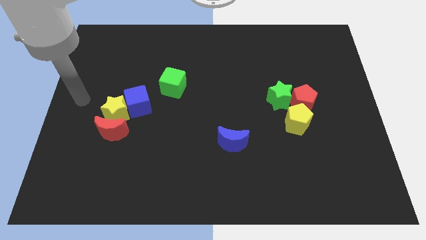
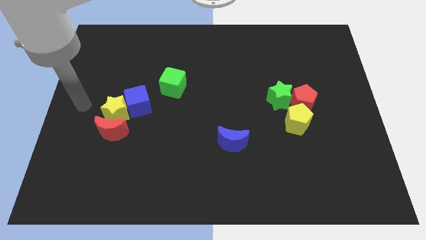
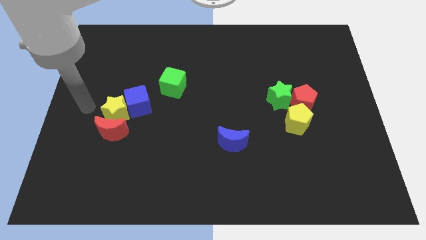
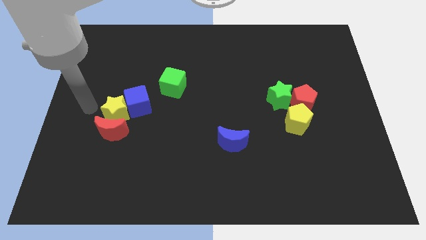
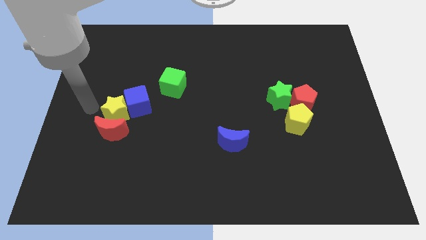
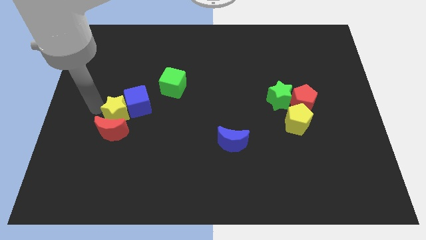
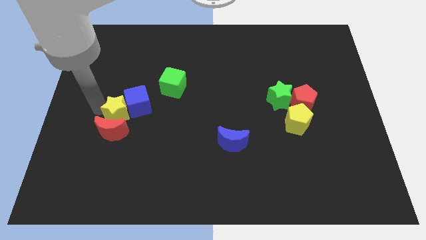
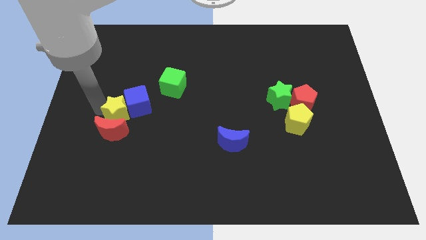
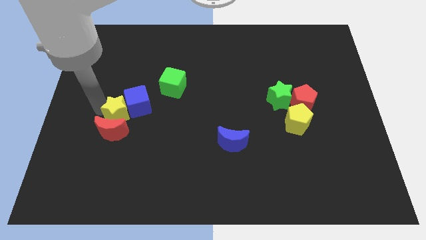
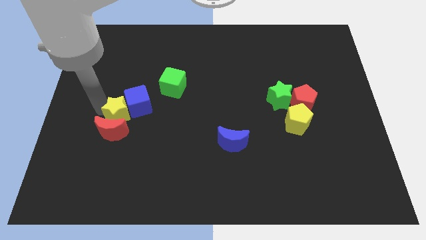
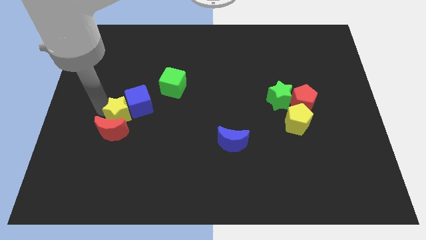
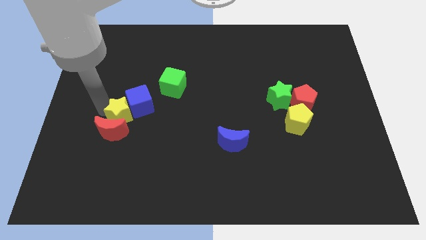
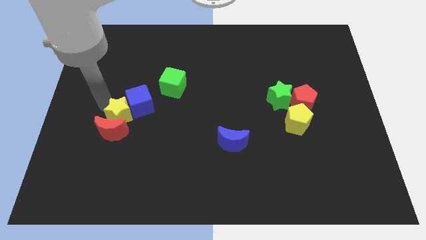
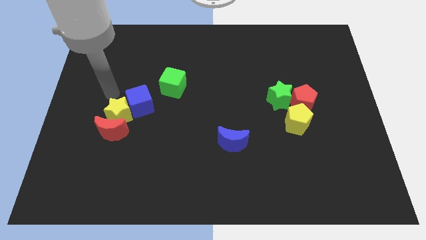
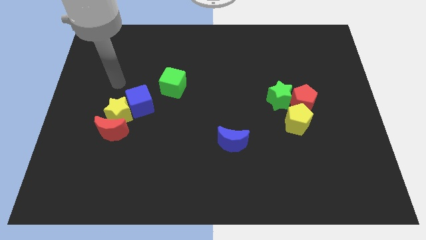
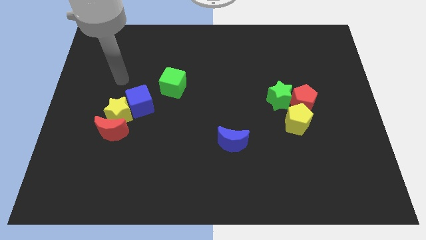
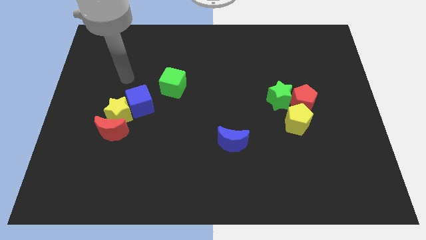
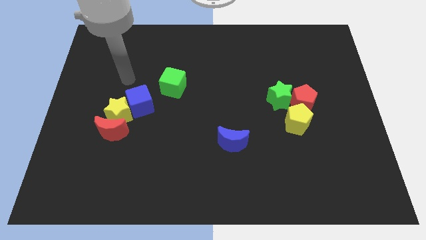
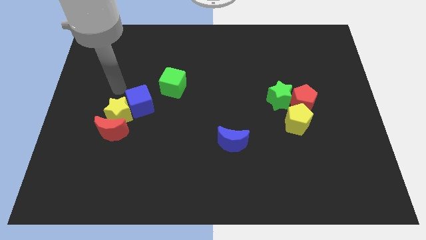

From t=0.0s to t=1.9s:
slightly push the yellow star in between blue block and red moon

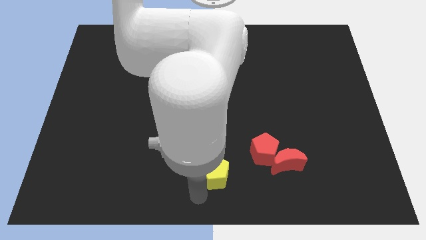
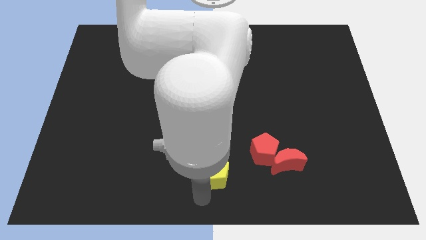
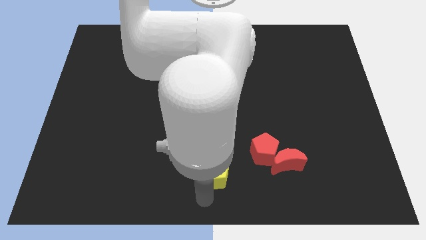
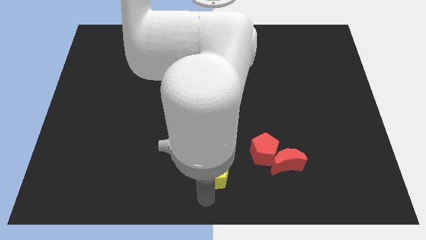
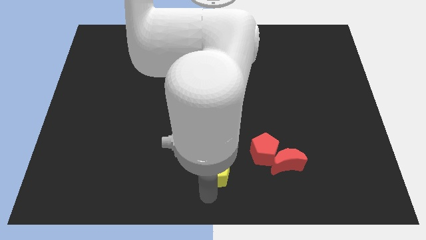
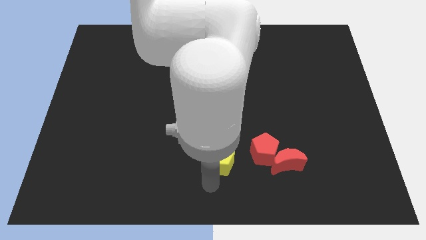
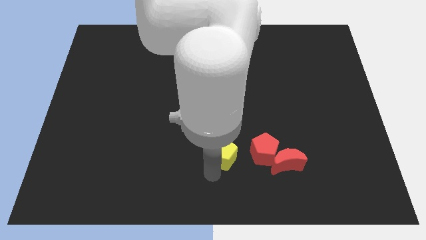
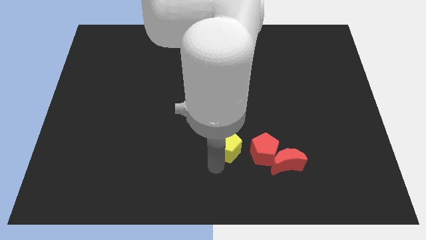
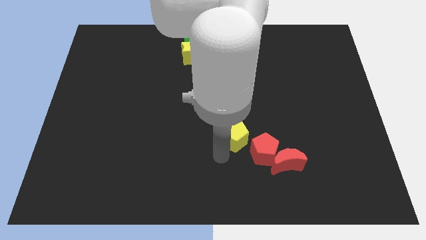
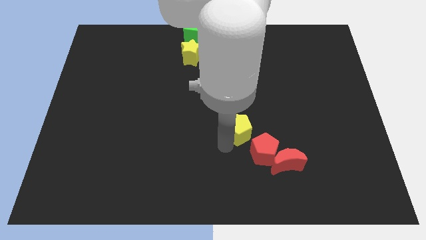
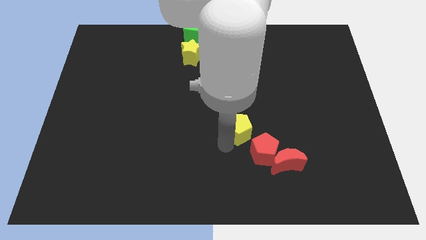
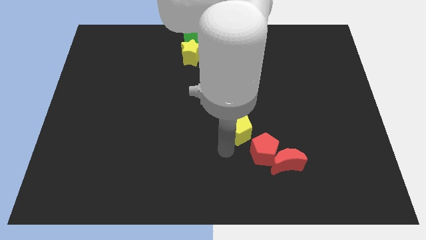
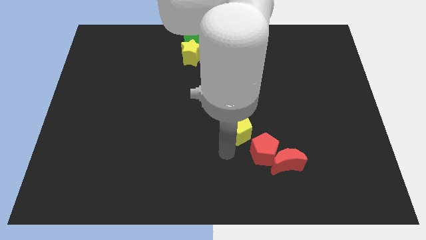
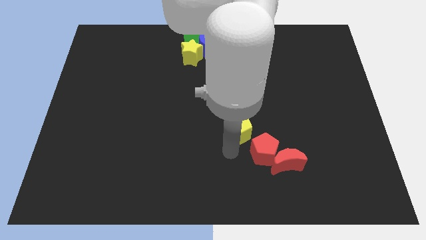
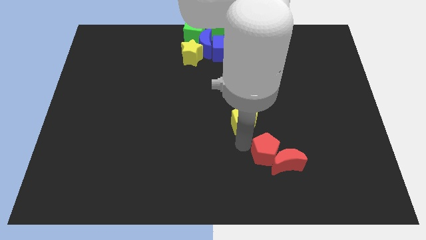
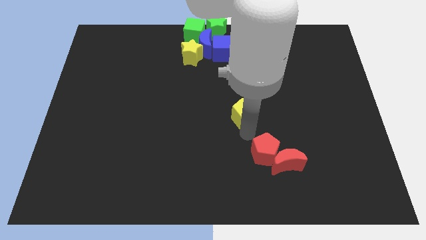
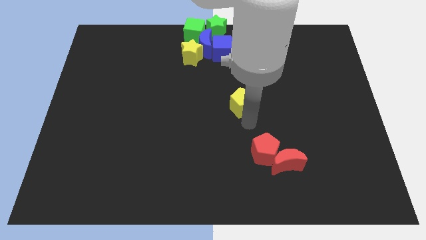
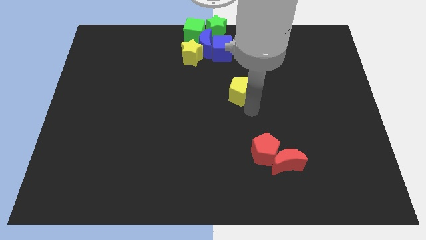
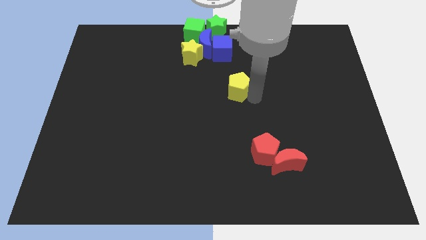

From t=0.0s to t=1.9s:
push the yellow pentagon towards up

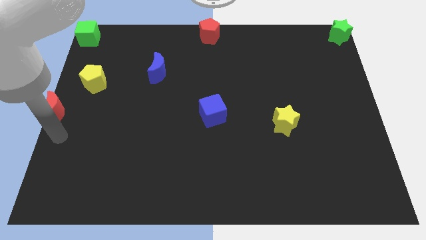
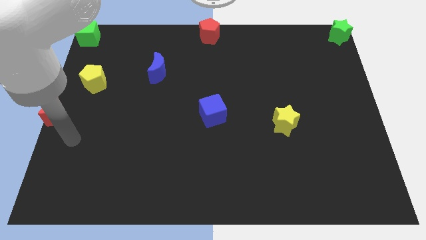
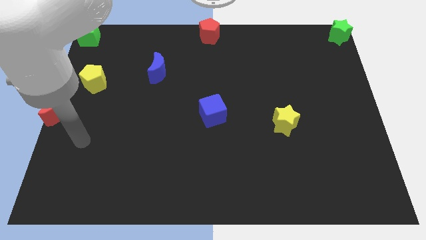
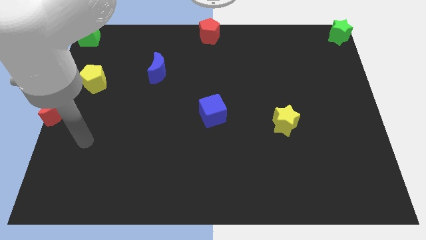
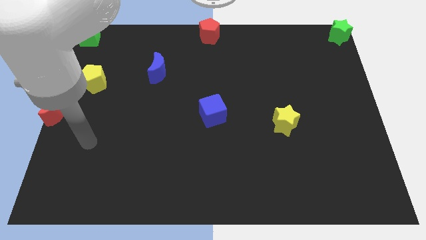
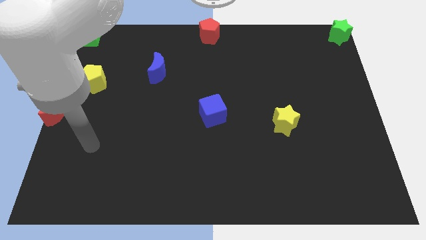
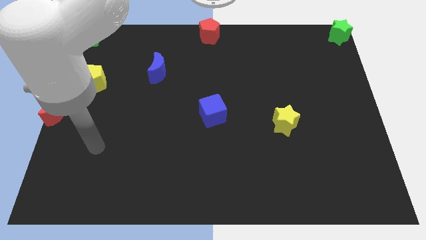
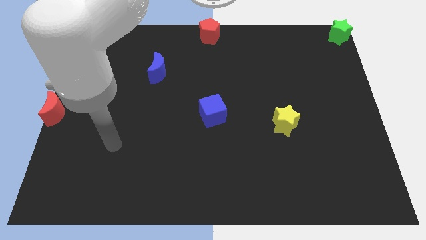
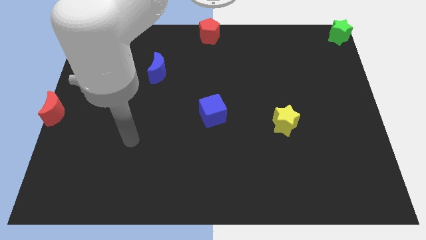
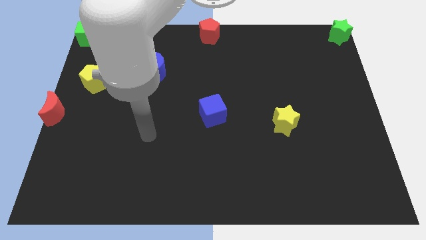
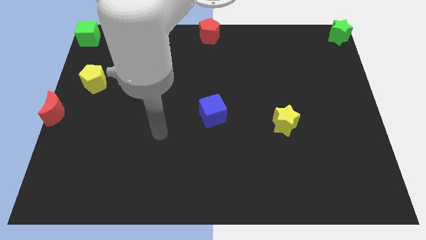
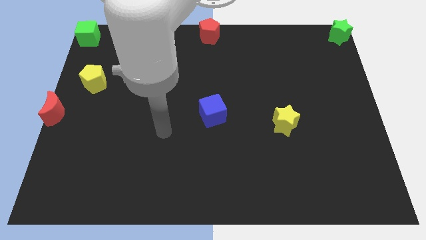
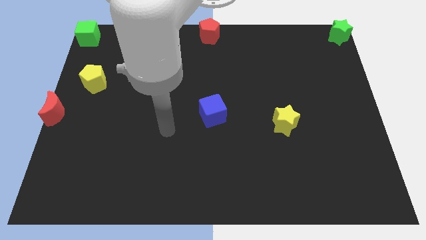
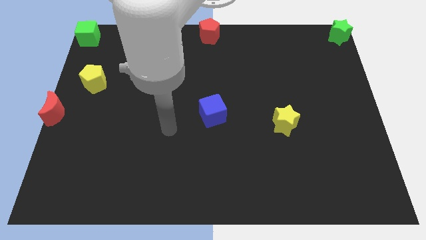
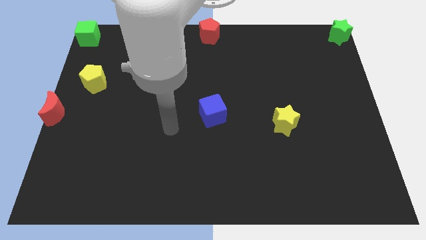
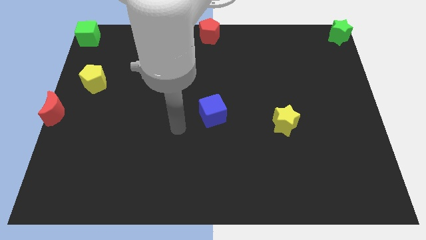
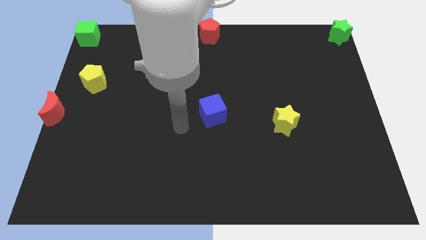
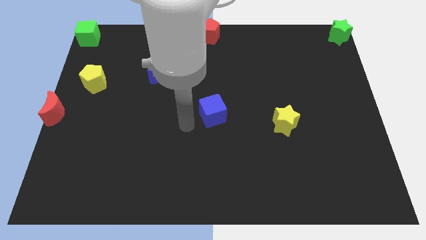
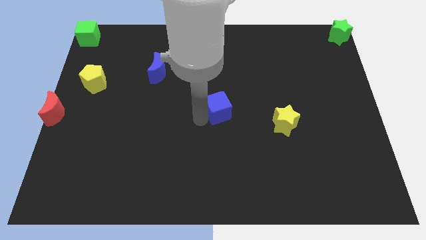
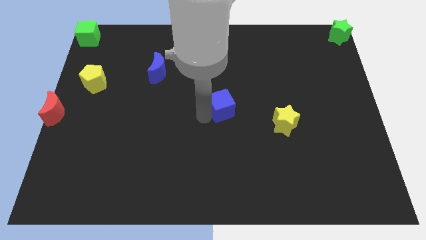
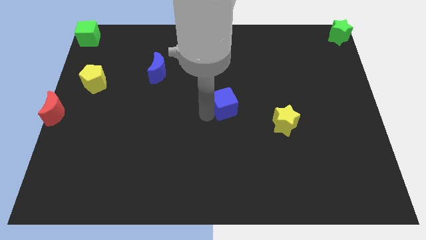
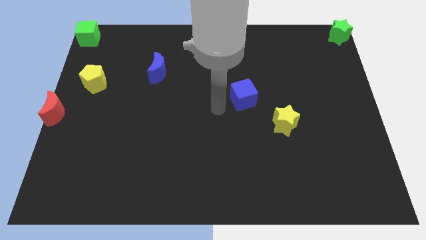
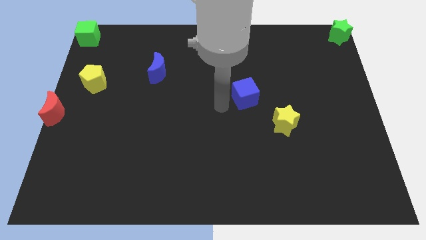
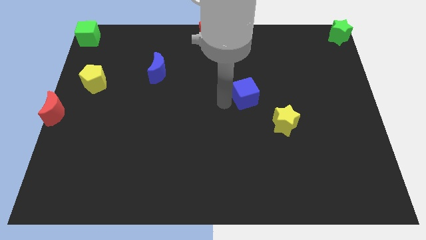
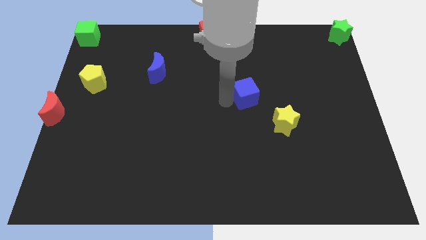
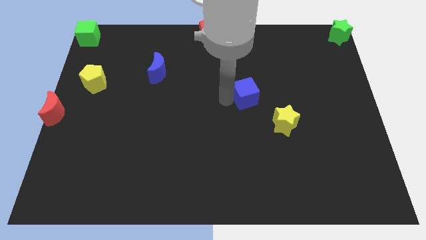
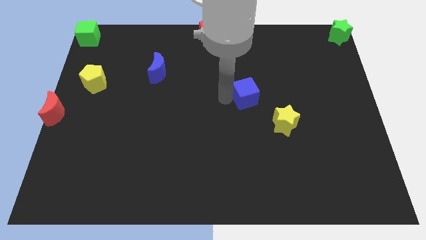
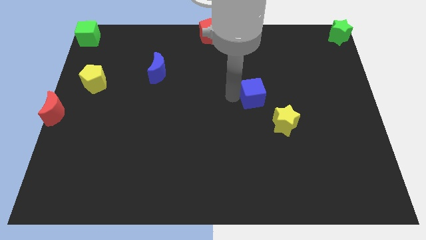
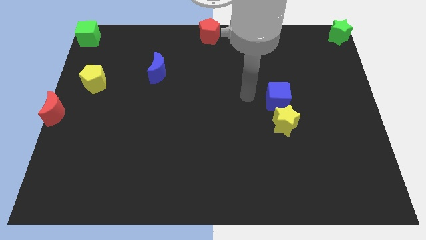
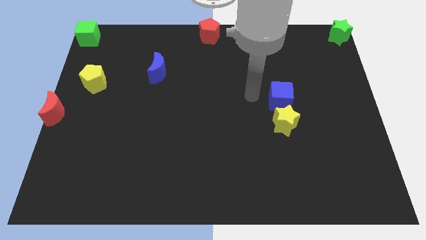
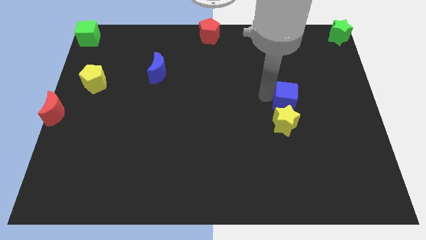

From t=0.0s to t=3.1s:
move the blue cube at the top side of the yellow star

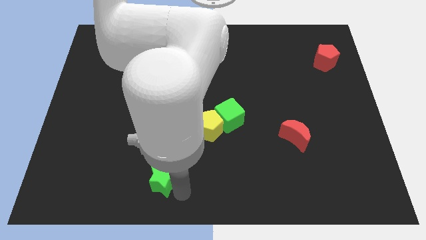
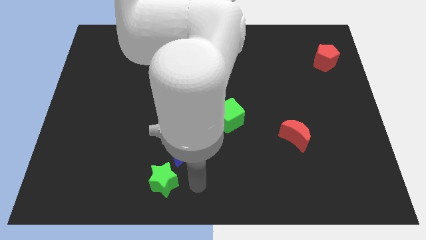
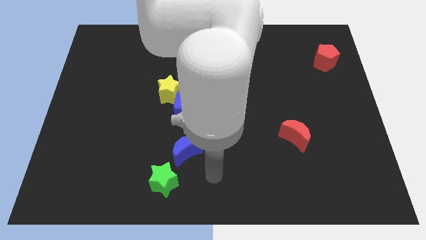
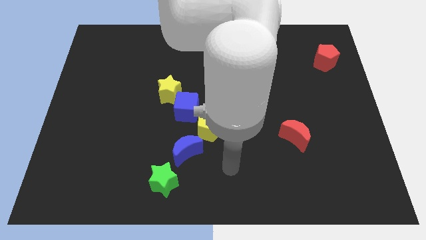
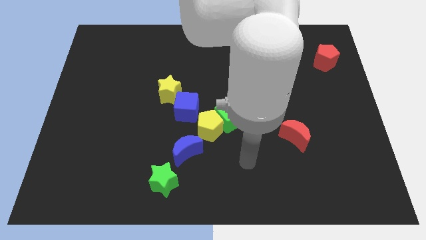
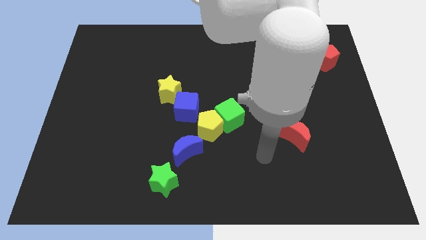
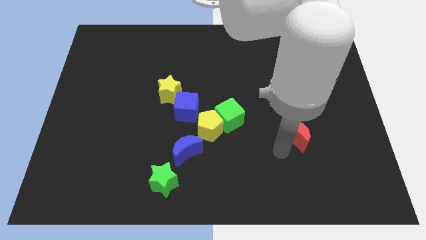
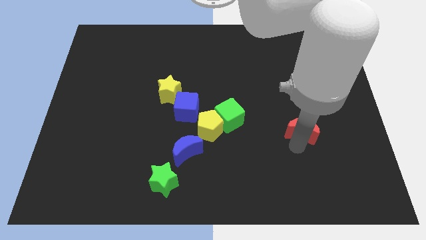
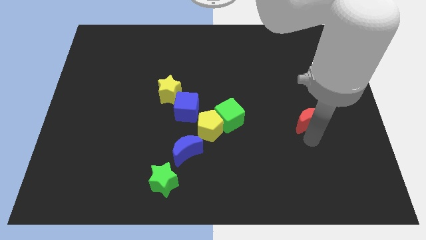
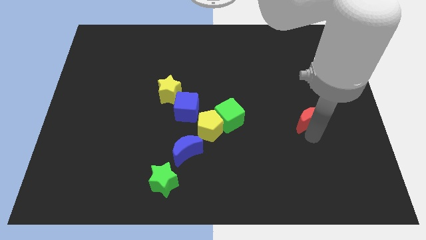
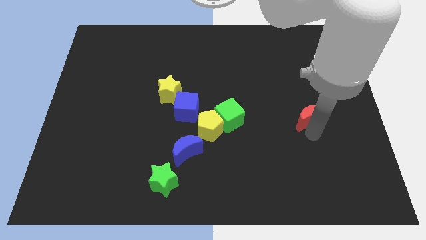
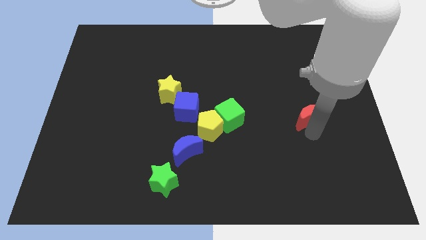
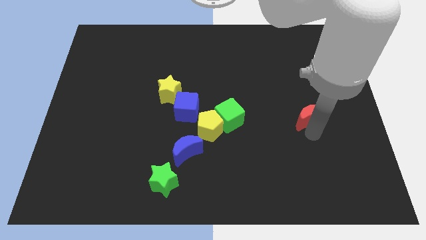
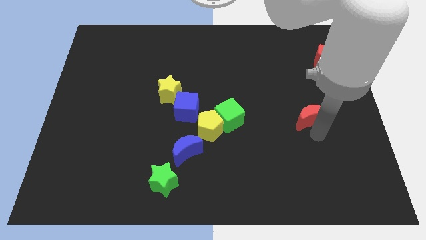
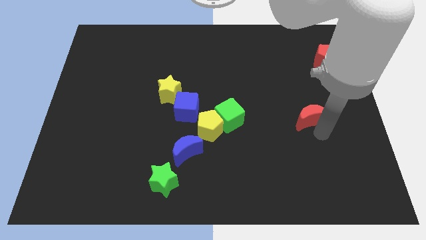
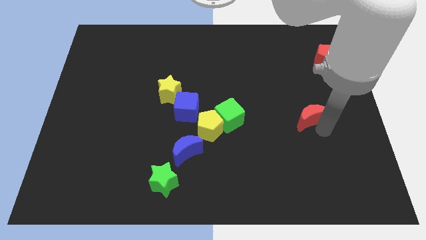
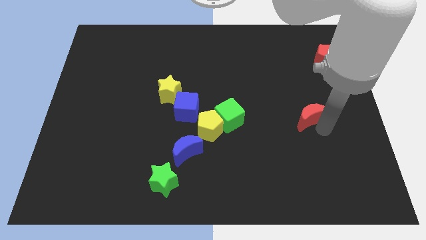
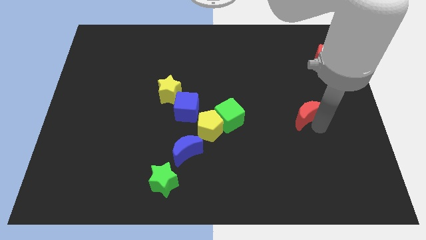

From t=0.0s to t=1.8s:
move your arm away from the green star
